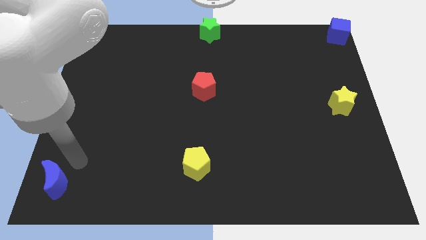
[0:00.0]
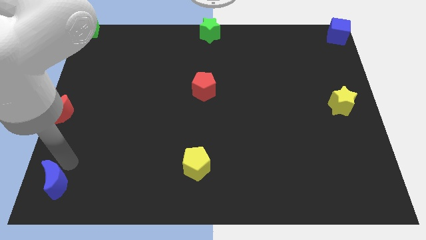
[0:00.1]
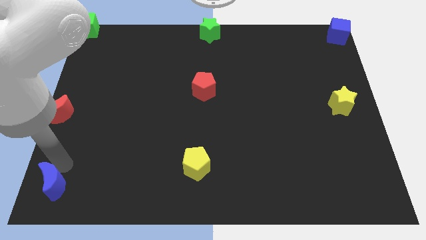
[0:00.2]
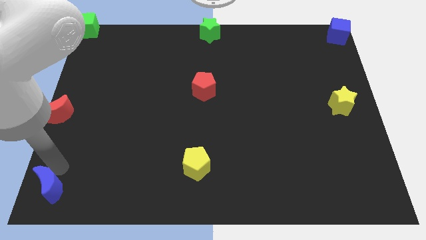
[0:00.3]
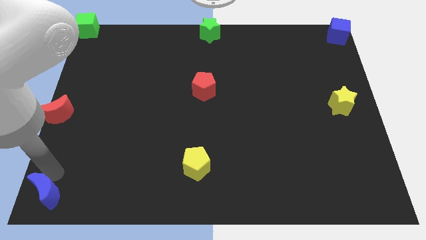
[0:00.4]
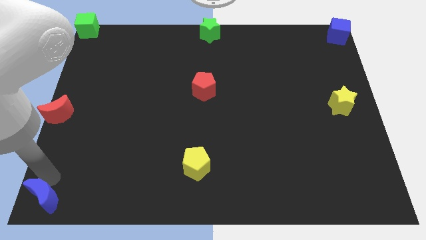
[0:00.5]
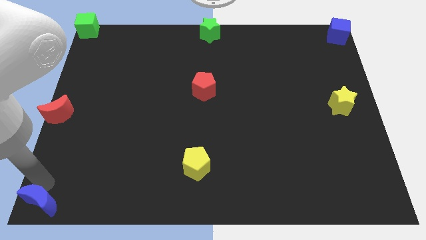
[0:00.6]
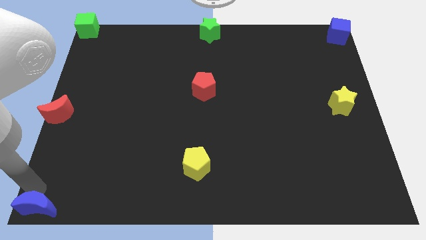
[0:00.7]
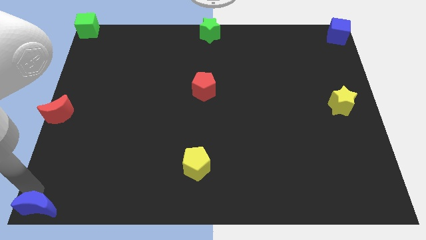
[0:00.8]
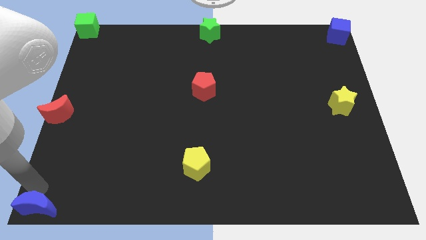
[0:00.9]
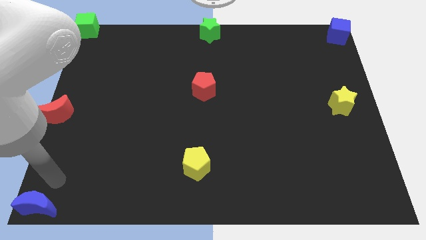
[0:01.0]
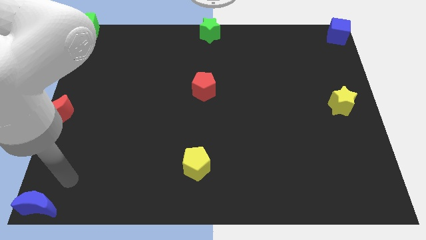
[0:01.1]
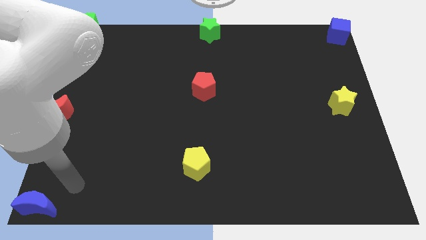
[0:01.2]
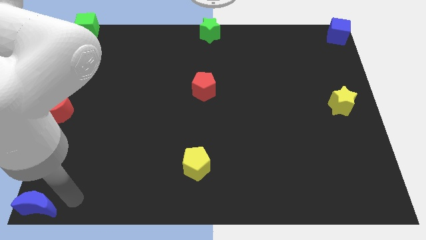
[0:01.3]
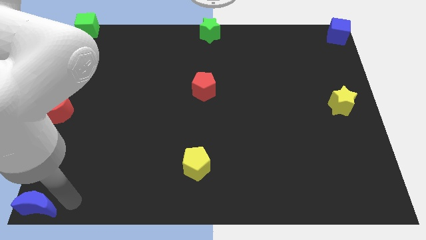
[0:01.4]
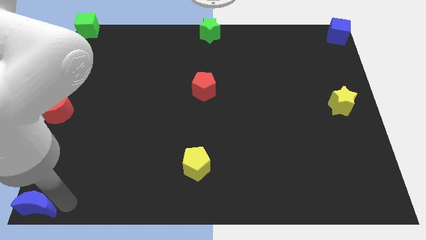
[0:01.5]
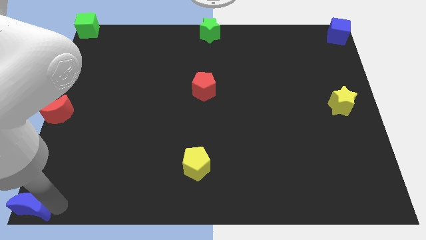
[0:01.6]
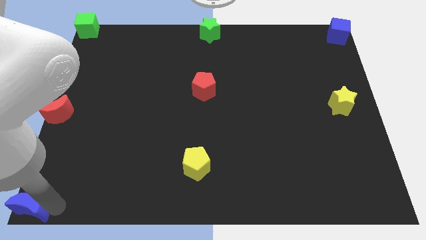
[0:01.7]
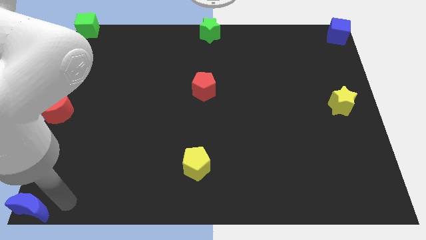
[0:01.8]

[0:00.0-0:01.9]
place the blue crescent at the bottom left corner of the board

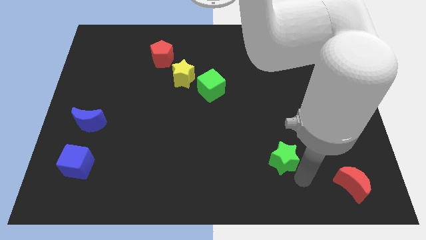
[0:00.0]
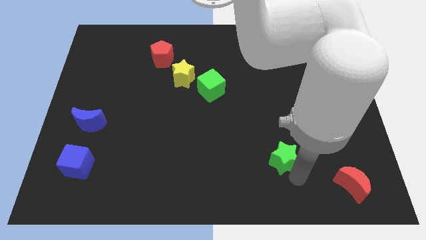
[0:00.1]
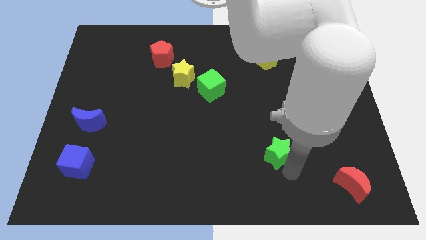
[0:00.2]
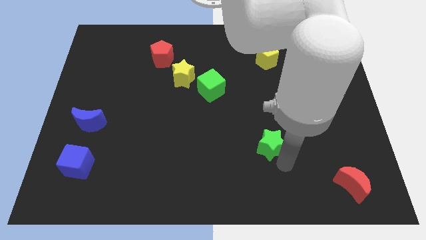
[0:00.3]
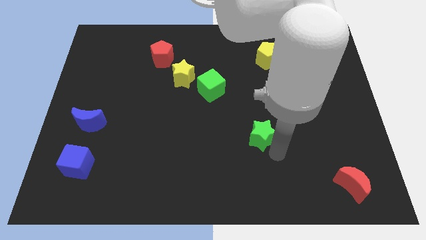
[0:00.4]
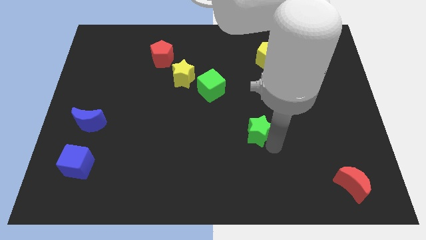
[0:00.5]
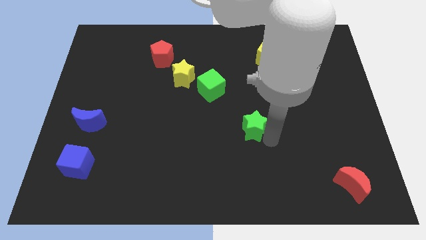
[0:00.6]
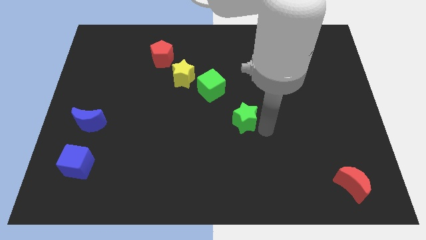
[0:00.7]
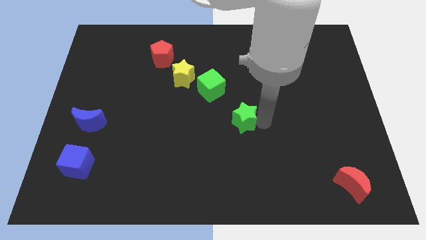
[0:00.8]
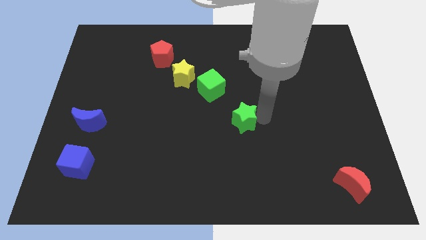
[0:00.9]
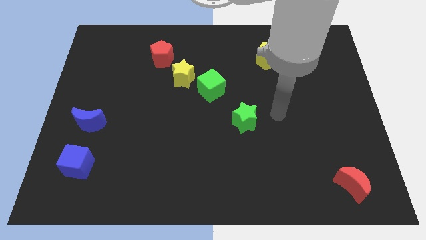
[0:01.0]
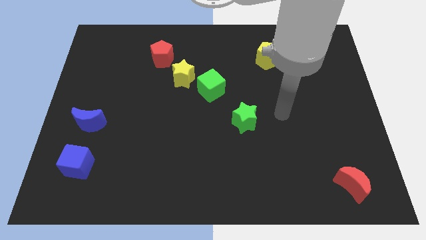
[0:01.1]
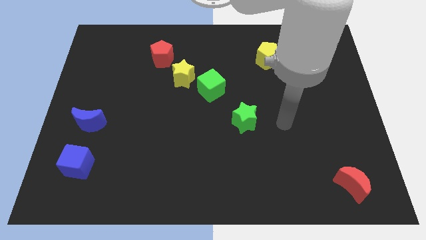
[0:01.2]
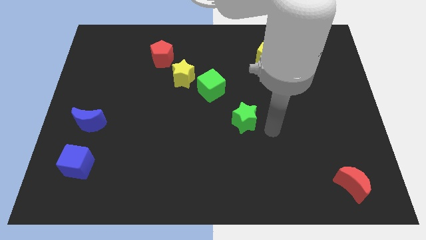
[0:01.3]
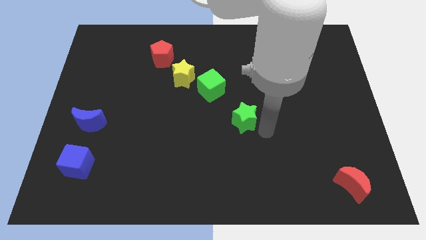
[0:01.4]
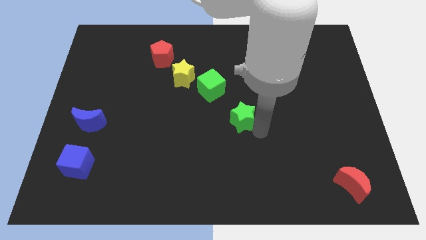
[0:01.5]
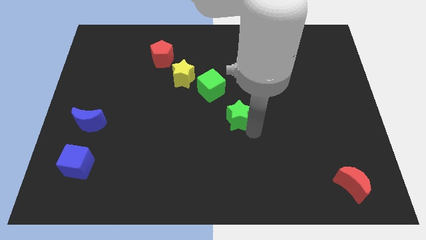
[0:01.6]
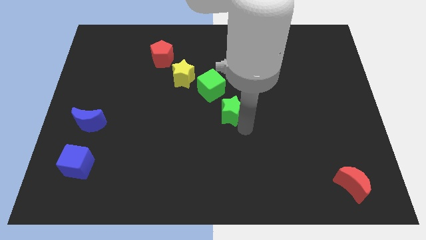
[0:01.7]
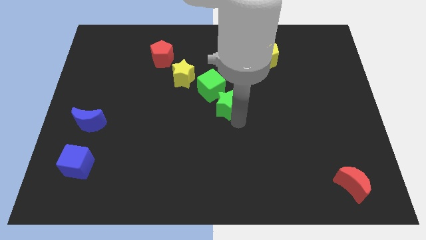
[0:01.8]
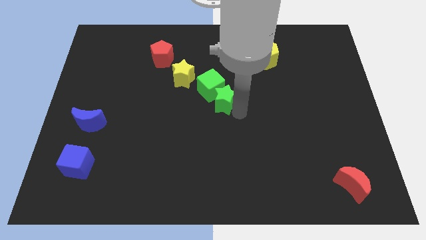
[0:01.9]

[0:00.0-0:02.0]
place the green star diagonally towards right side of the green cube

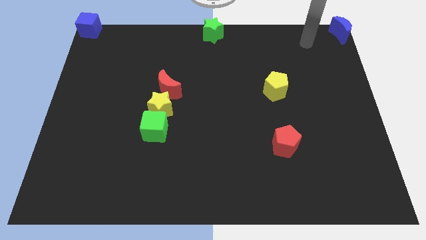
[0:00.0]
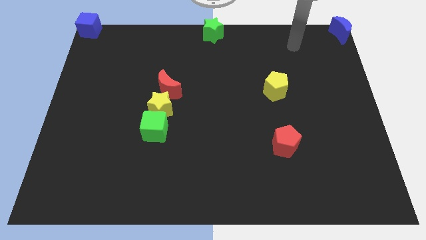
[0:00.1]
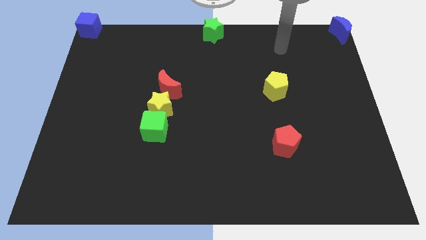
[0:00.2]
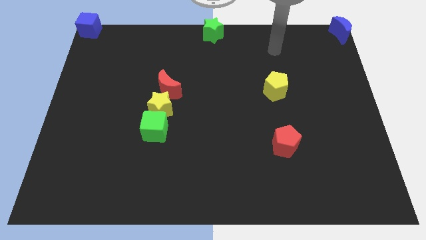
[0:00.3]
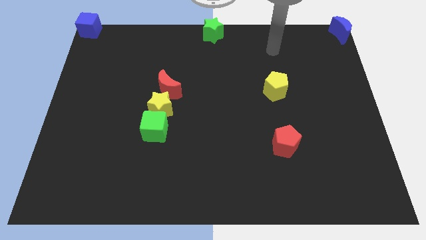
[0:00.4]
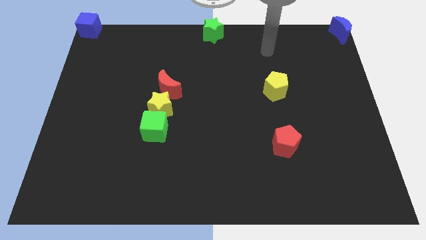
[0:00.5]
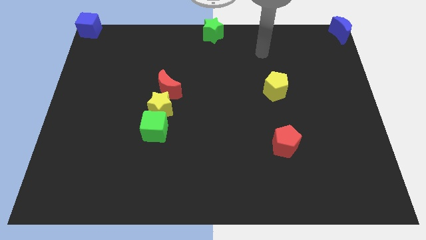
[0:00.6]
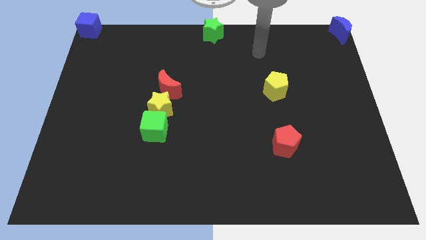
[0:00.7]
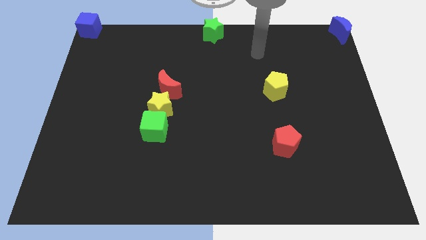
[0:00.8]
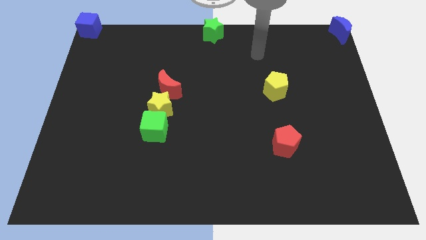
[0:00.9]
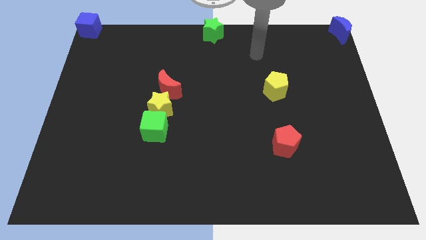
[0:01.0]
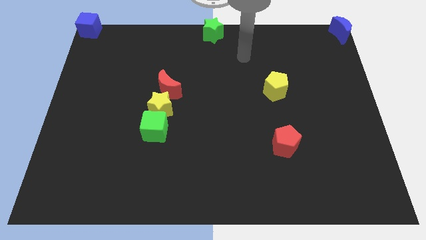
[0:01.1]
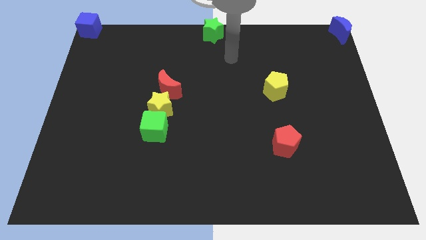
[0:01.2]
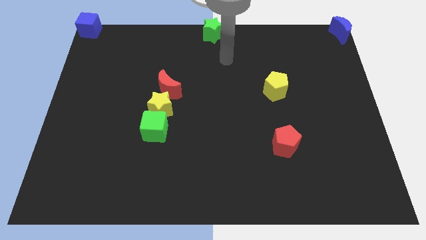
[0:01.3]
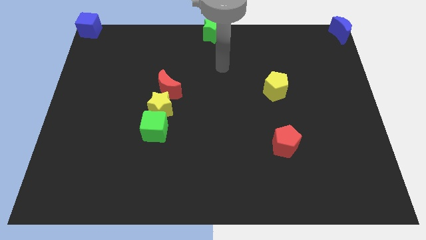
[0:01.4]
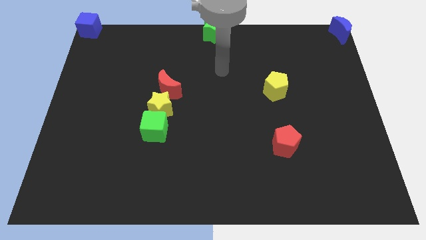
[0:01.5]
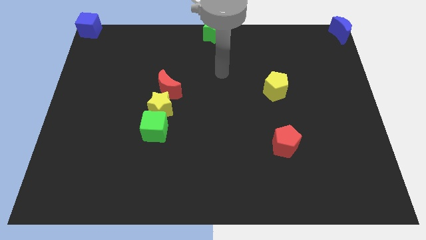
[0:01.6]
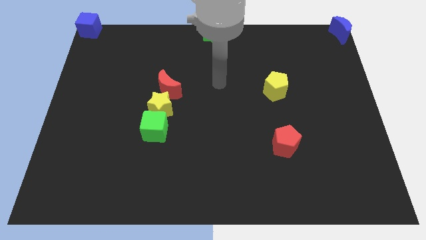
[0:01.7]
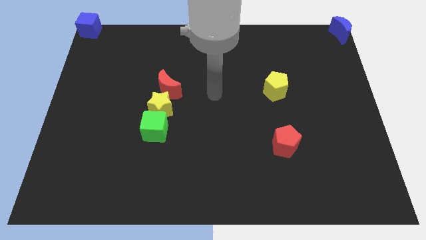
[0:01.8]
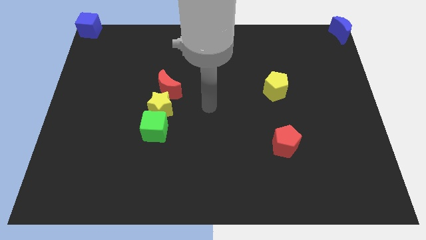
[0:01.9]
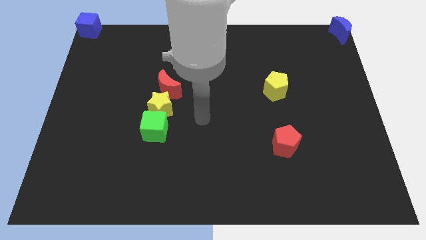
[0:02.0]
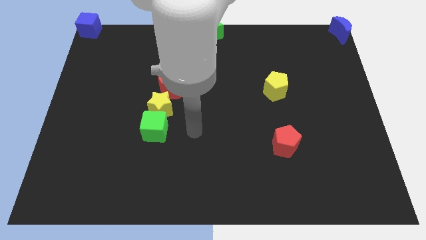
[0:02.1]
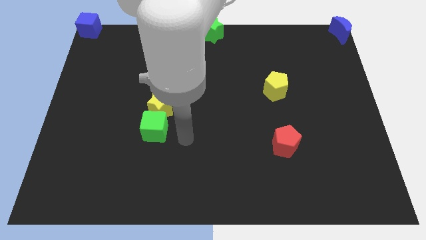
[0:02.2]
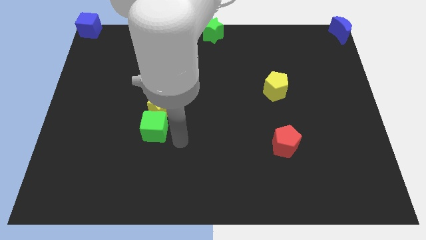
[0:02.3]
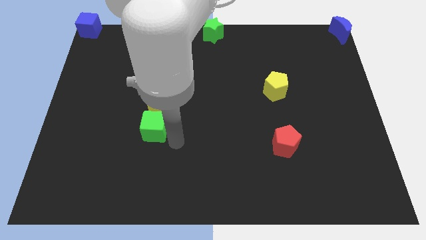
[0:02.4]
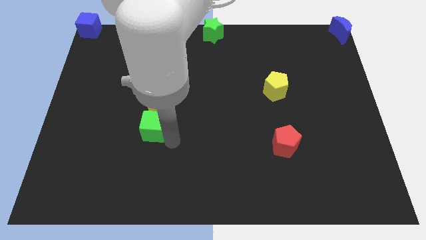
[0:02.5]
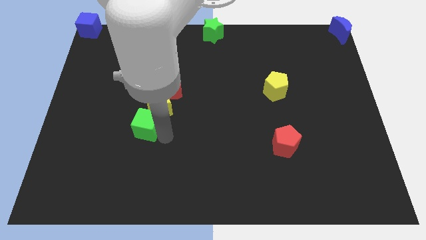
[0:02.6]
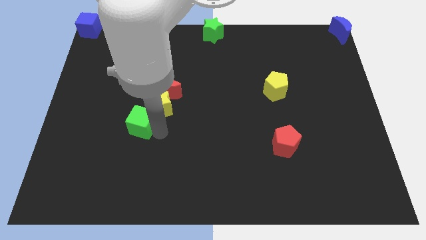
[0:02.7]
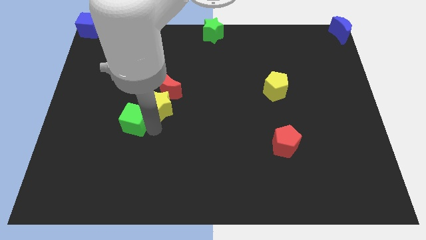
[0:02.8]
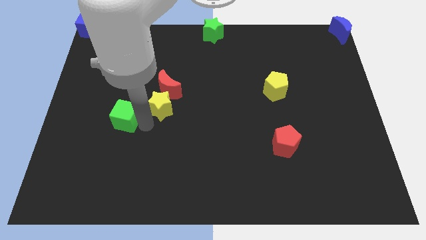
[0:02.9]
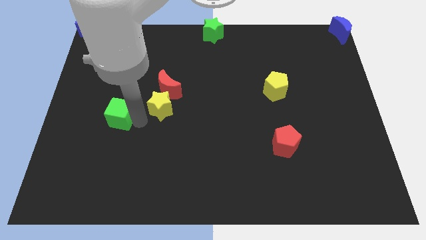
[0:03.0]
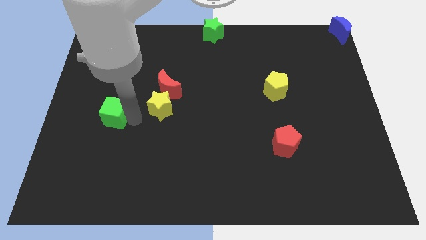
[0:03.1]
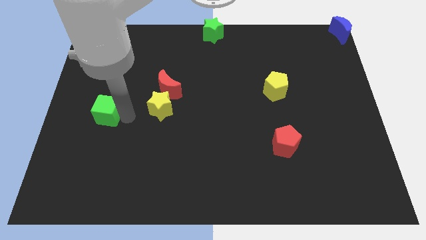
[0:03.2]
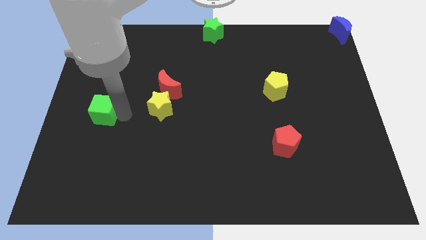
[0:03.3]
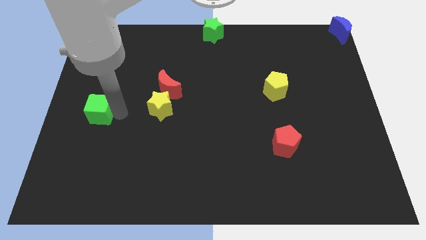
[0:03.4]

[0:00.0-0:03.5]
push the green cube to the left of the yellow star

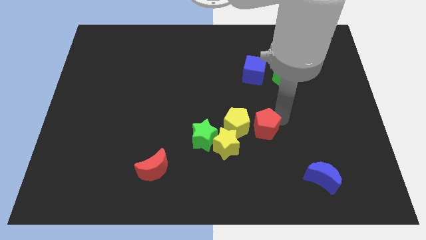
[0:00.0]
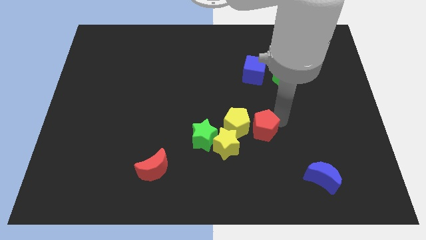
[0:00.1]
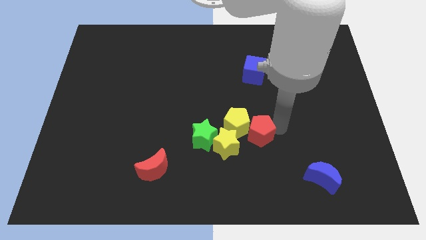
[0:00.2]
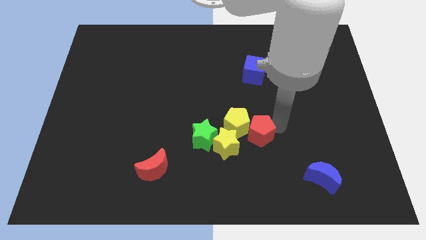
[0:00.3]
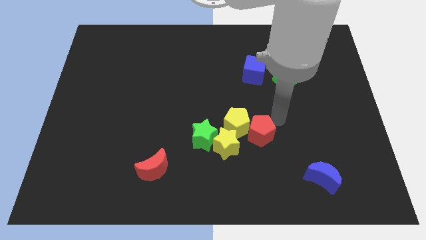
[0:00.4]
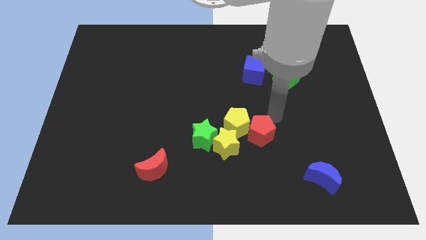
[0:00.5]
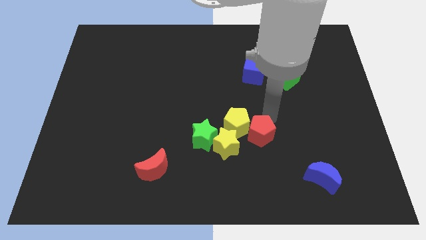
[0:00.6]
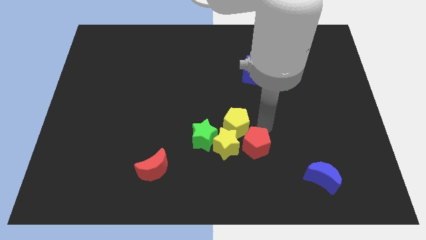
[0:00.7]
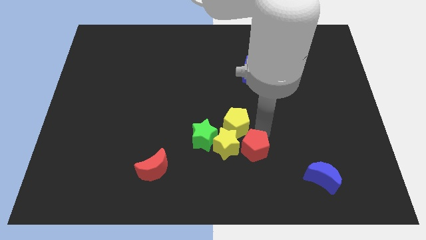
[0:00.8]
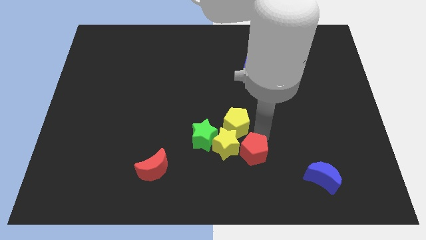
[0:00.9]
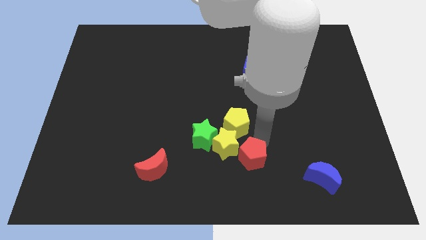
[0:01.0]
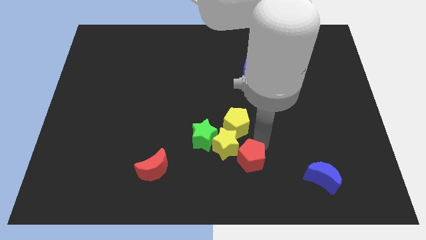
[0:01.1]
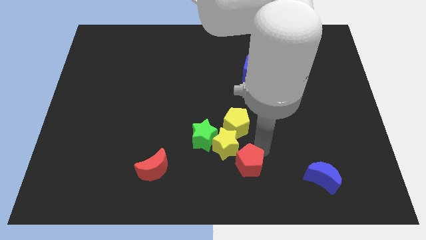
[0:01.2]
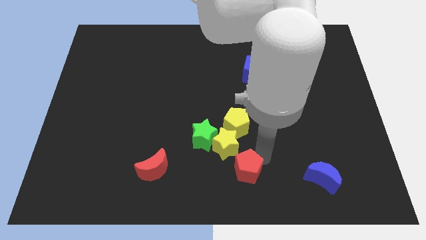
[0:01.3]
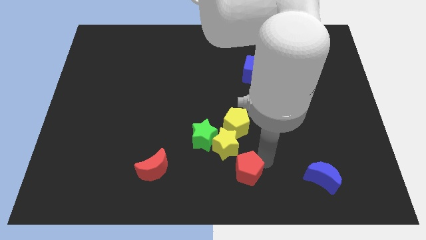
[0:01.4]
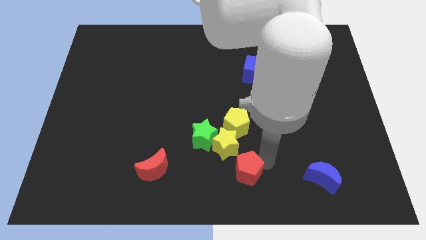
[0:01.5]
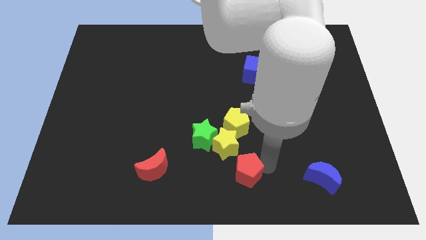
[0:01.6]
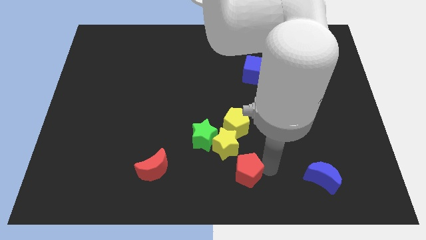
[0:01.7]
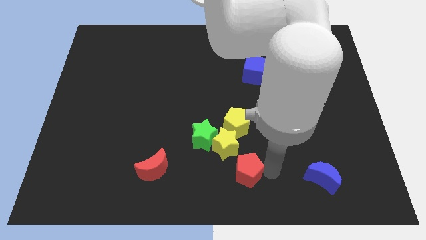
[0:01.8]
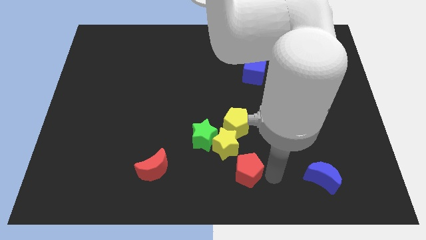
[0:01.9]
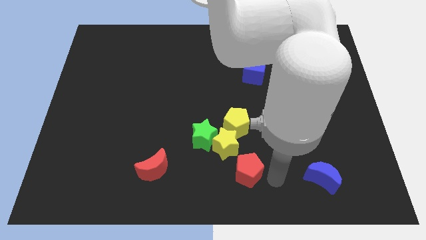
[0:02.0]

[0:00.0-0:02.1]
push the red pentagon below to the yellow star
